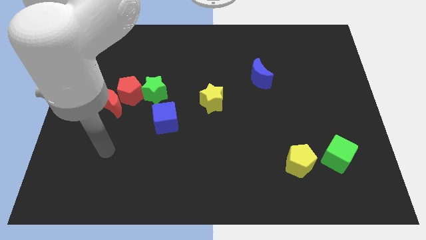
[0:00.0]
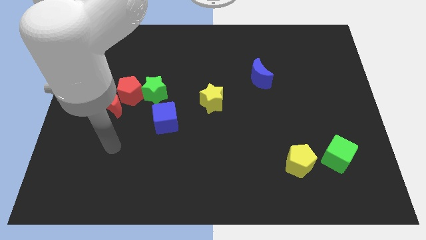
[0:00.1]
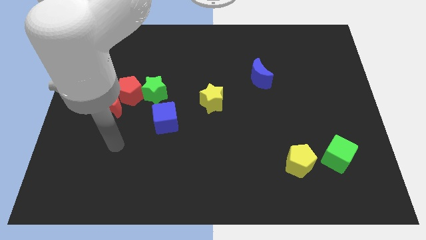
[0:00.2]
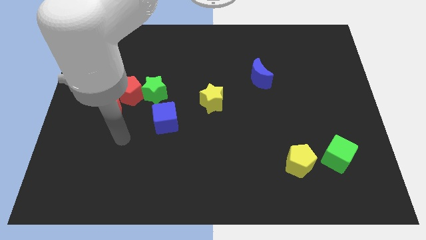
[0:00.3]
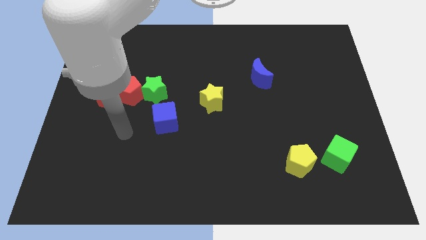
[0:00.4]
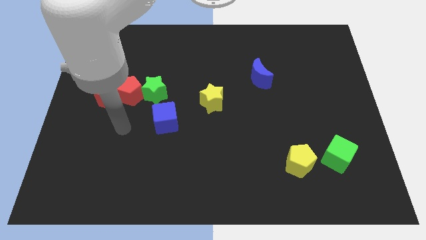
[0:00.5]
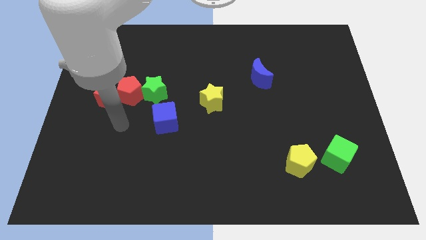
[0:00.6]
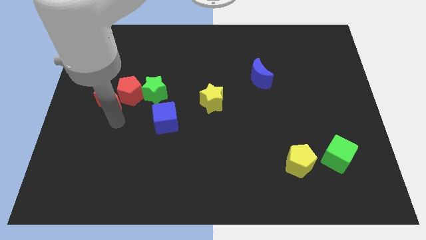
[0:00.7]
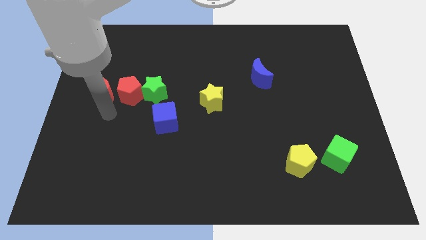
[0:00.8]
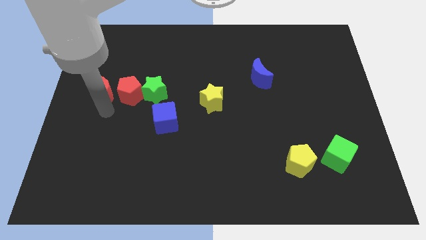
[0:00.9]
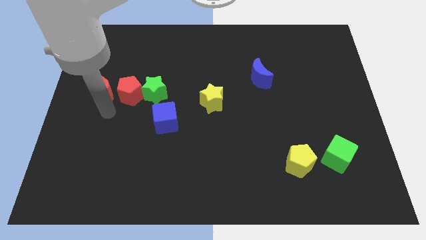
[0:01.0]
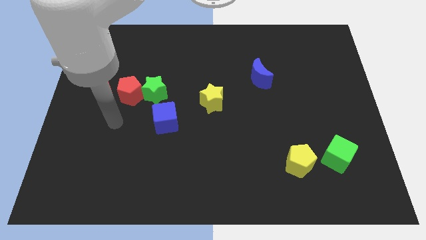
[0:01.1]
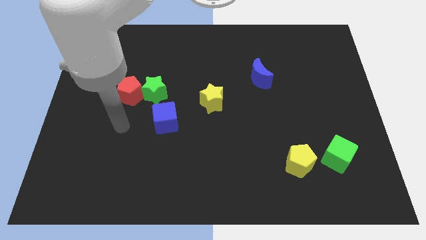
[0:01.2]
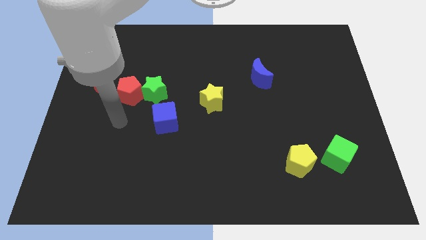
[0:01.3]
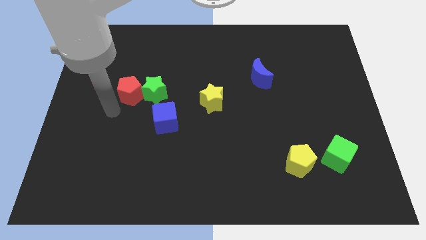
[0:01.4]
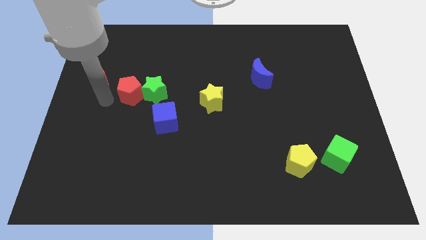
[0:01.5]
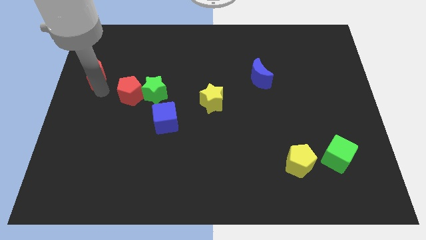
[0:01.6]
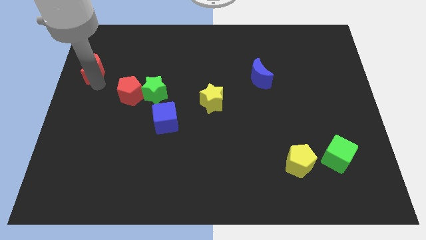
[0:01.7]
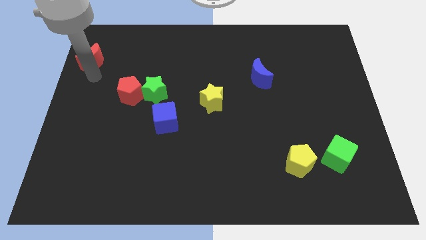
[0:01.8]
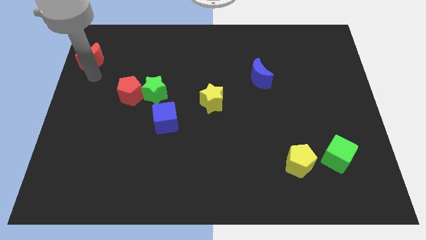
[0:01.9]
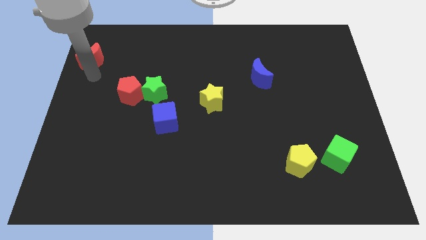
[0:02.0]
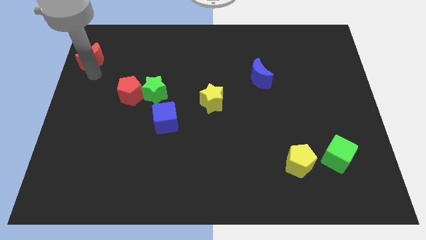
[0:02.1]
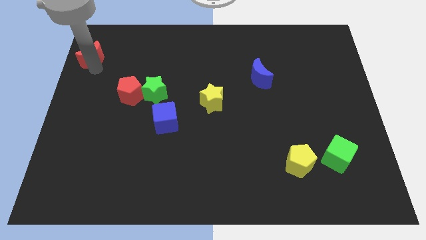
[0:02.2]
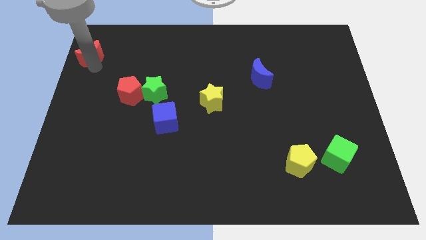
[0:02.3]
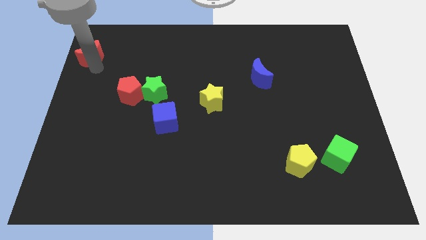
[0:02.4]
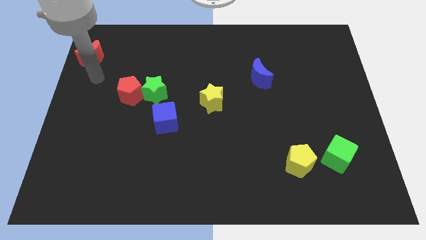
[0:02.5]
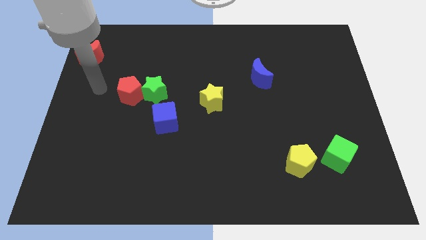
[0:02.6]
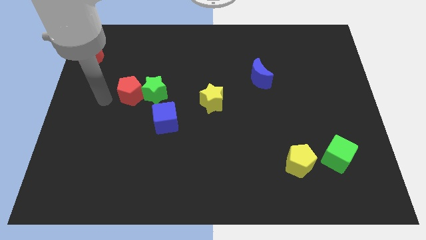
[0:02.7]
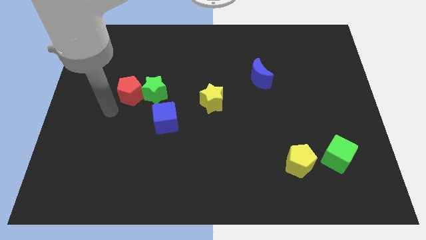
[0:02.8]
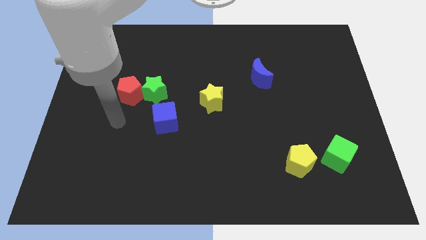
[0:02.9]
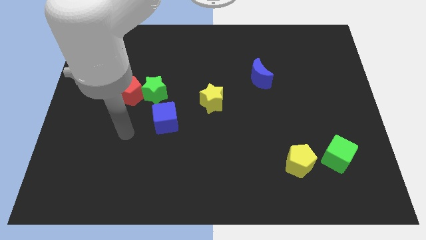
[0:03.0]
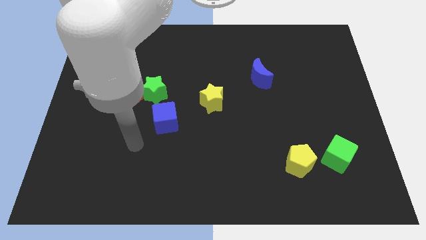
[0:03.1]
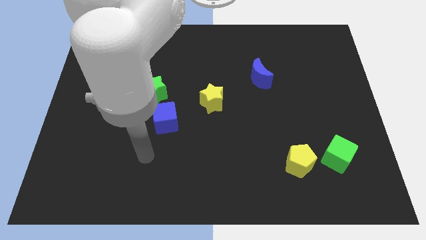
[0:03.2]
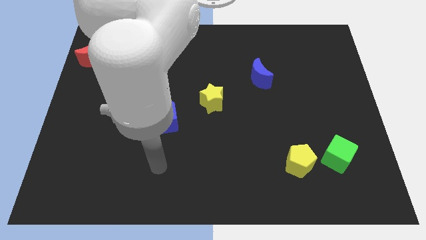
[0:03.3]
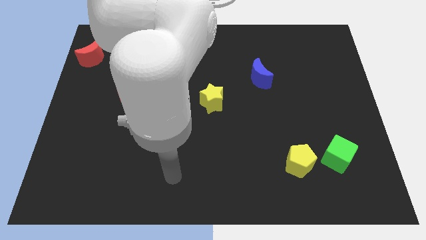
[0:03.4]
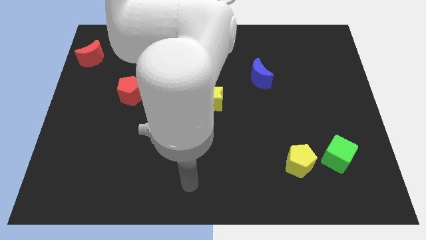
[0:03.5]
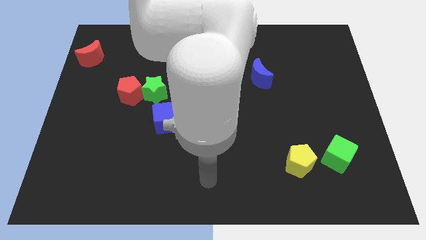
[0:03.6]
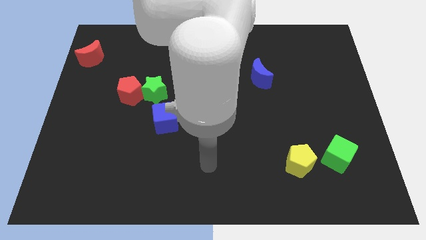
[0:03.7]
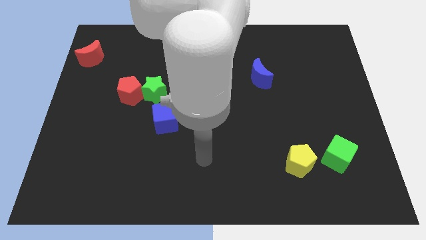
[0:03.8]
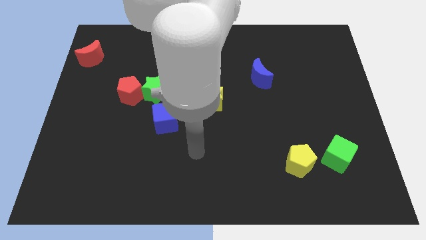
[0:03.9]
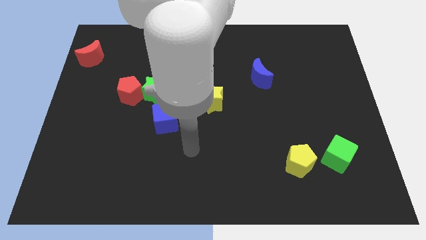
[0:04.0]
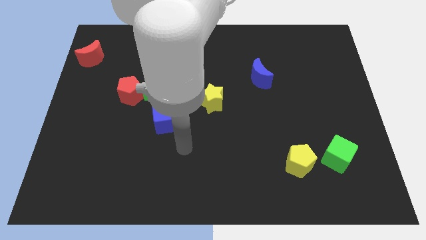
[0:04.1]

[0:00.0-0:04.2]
push the red crescent towards the top left side of the board

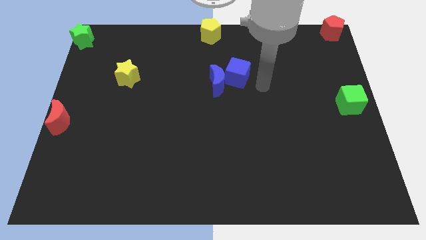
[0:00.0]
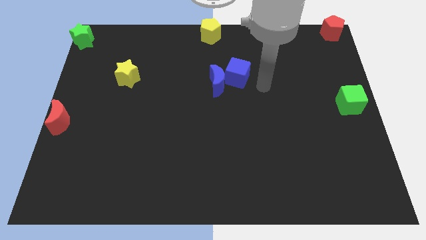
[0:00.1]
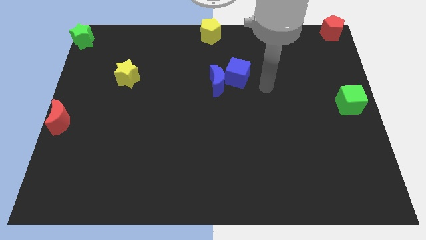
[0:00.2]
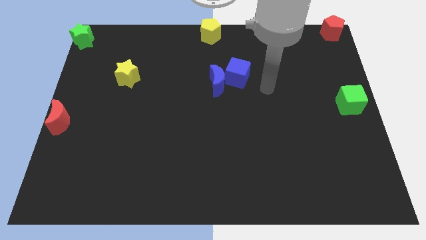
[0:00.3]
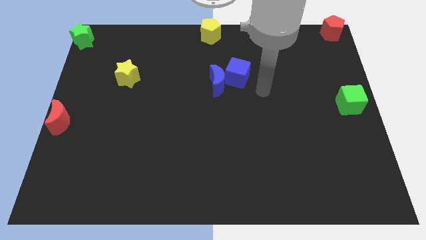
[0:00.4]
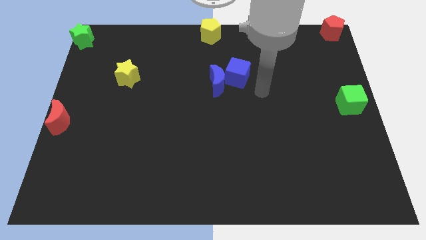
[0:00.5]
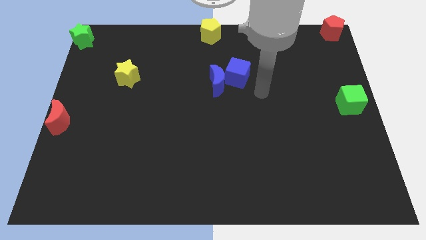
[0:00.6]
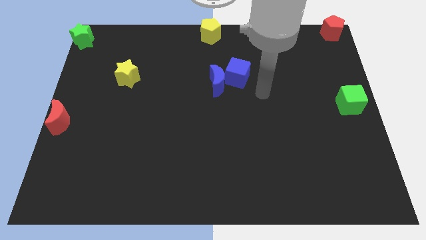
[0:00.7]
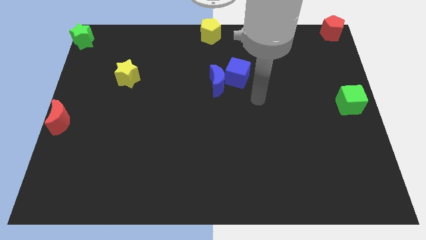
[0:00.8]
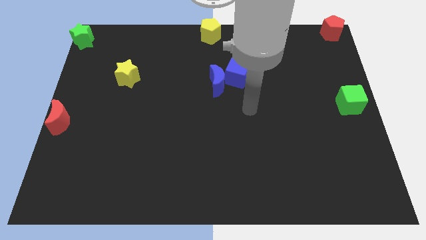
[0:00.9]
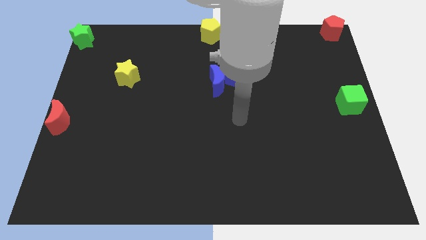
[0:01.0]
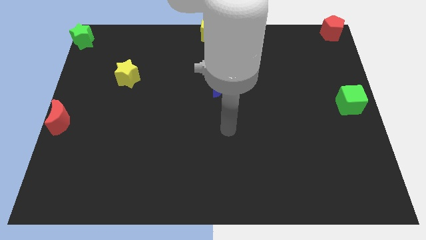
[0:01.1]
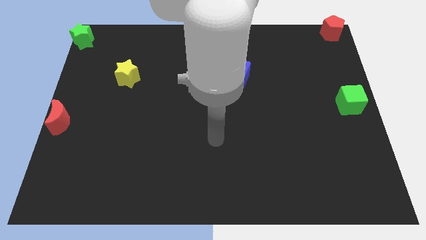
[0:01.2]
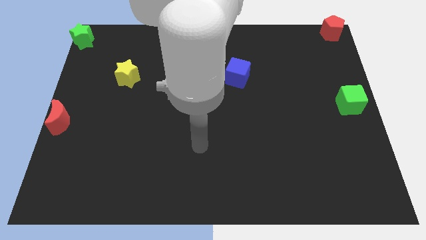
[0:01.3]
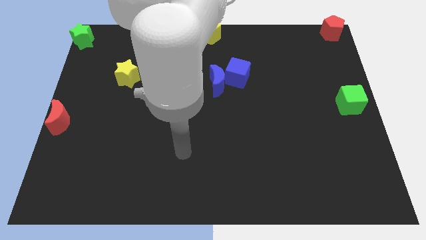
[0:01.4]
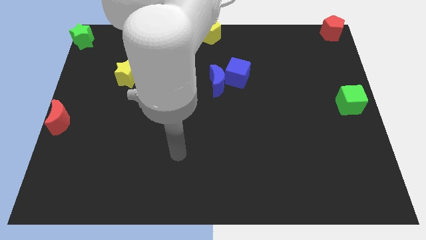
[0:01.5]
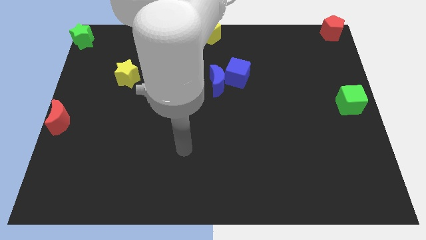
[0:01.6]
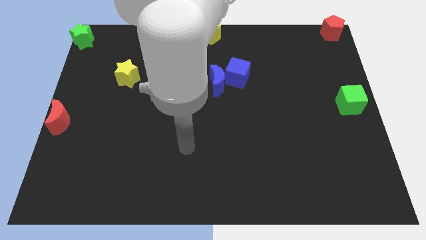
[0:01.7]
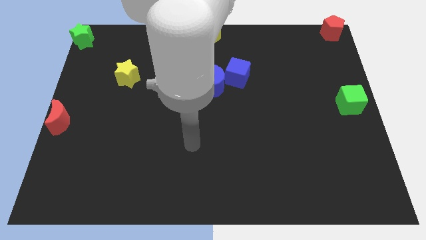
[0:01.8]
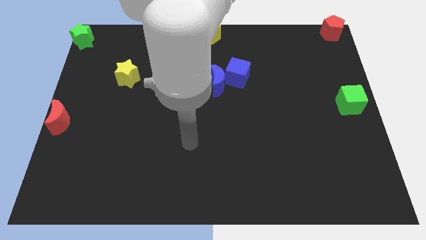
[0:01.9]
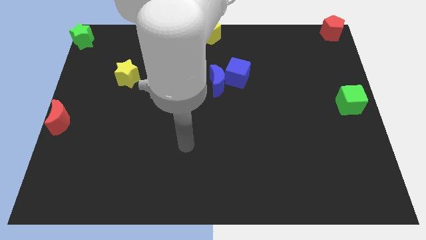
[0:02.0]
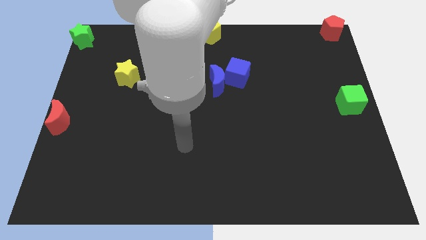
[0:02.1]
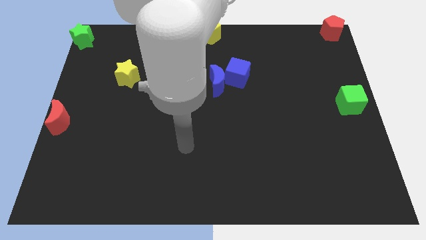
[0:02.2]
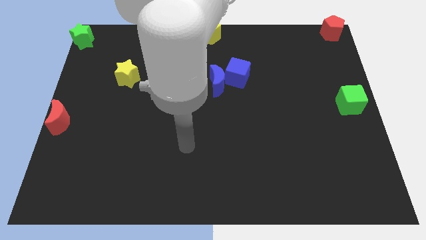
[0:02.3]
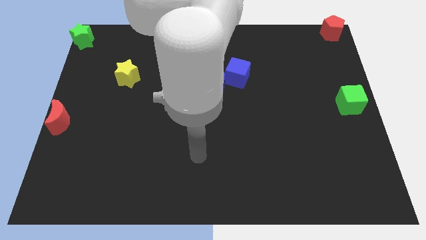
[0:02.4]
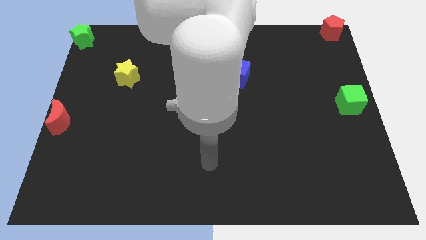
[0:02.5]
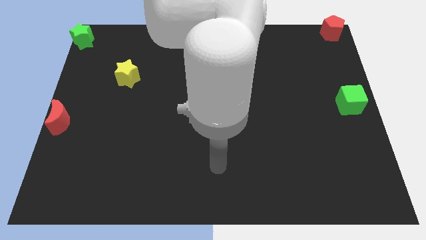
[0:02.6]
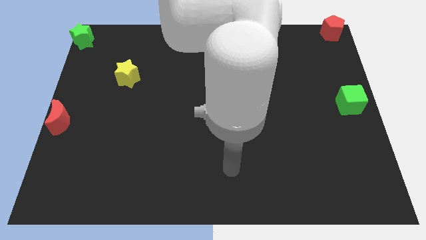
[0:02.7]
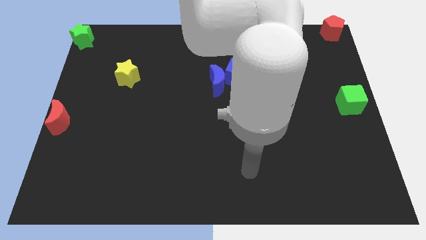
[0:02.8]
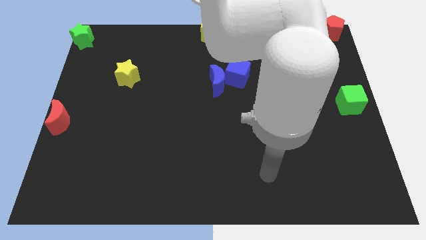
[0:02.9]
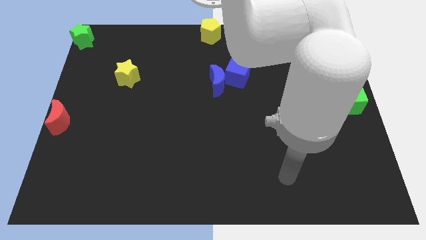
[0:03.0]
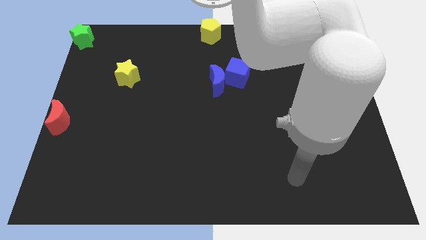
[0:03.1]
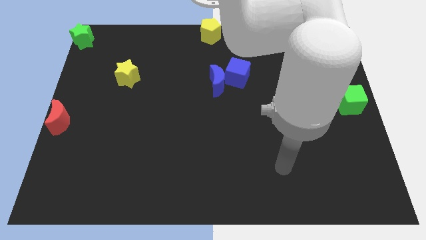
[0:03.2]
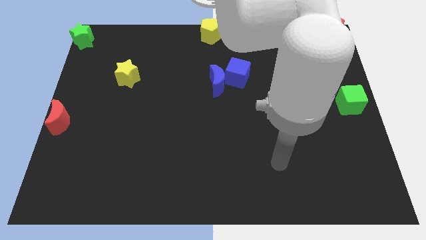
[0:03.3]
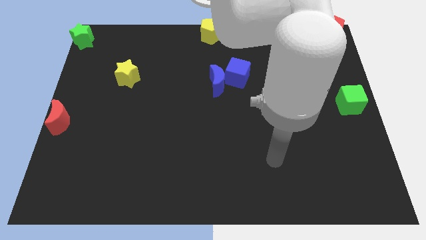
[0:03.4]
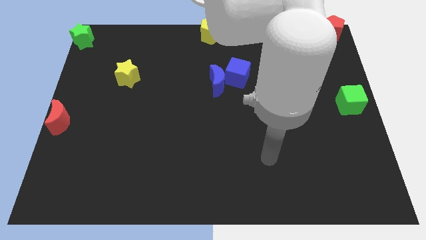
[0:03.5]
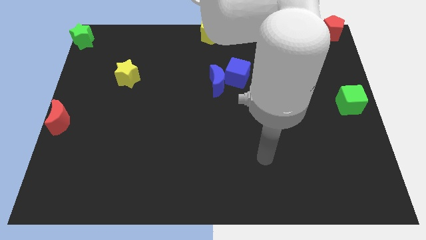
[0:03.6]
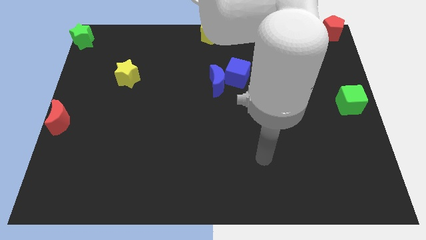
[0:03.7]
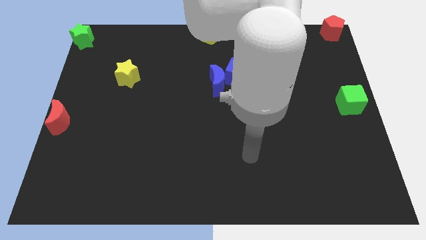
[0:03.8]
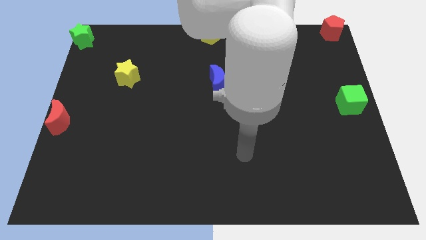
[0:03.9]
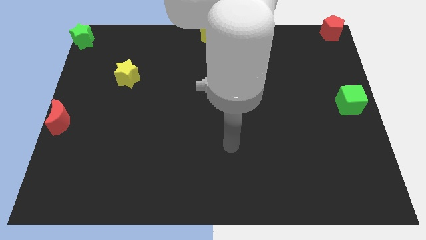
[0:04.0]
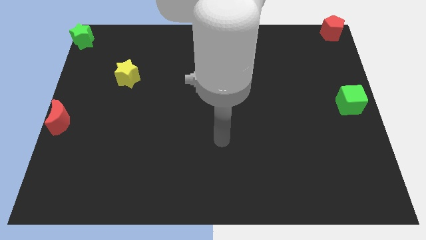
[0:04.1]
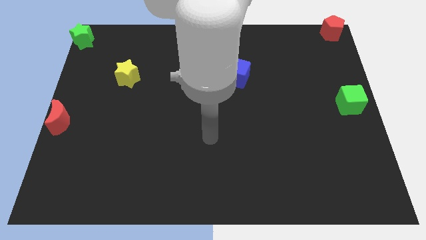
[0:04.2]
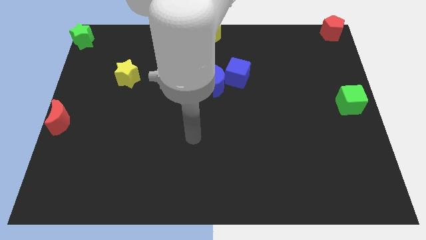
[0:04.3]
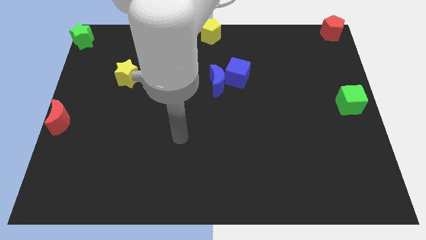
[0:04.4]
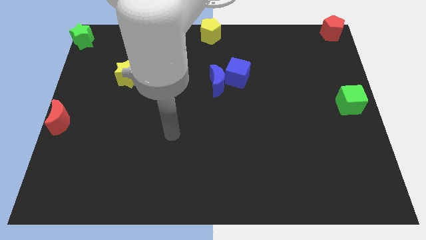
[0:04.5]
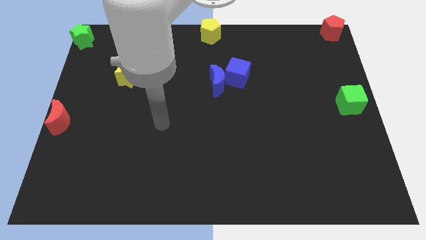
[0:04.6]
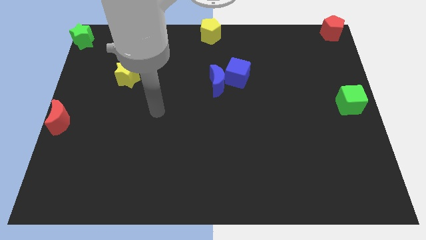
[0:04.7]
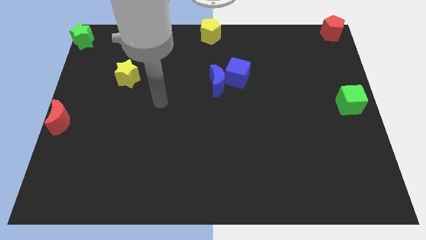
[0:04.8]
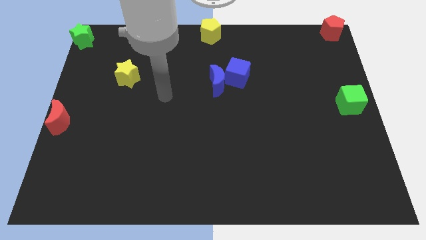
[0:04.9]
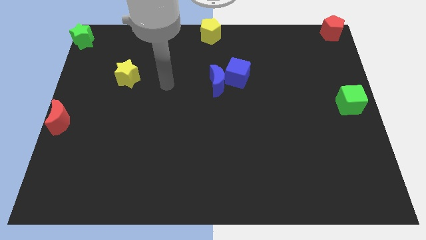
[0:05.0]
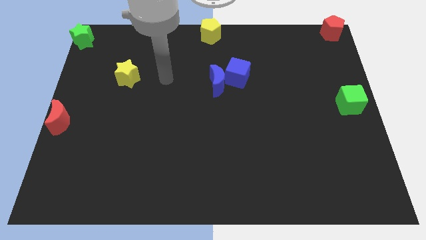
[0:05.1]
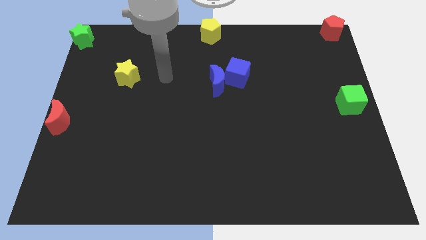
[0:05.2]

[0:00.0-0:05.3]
point the arm in between the yellow star and the blue moon
